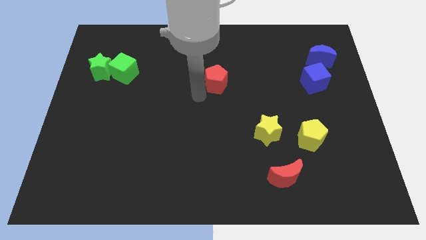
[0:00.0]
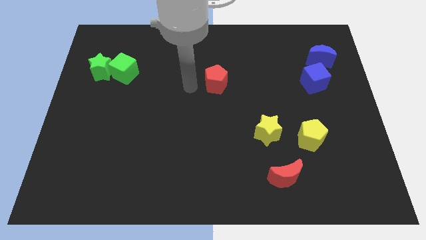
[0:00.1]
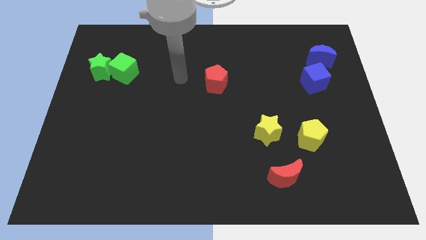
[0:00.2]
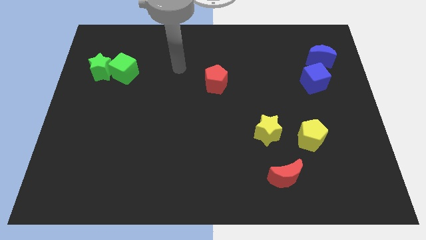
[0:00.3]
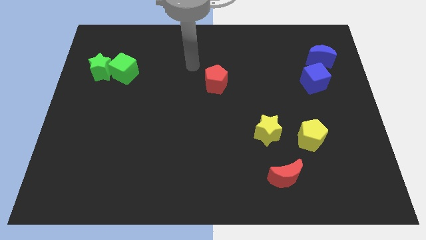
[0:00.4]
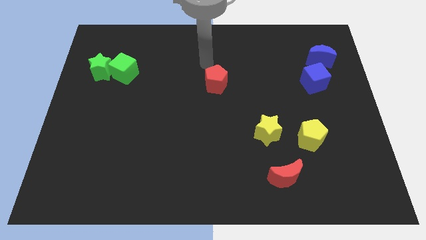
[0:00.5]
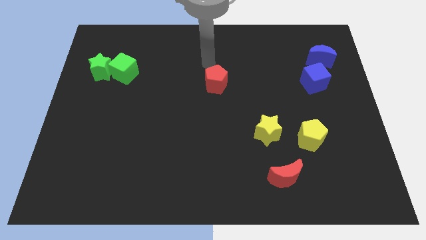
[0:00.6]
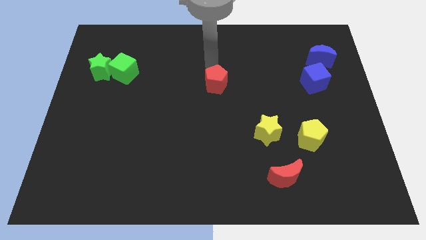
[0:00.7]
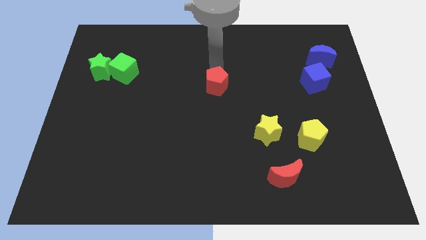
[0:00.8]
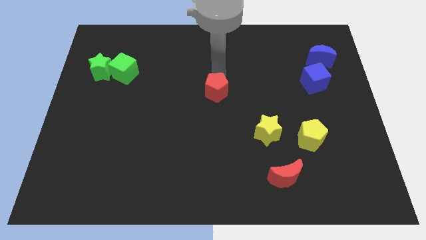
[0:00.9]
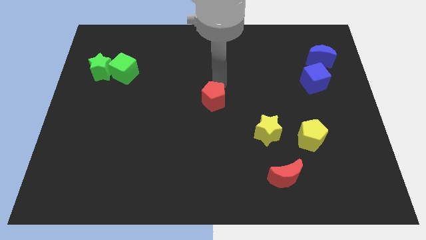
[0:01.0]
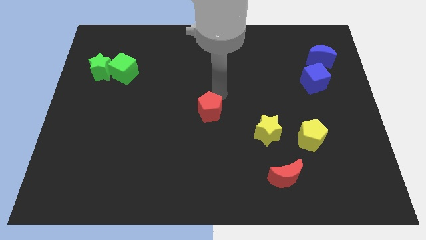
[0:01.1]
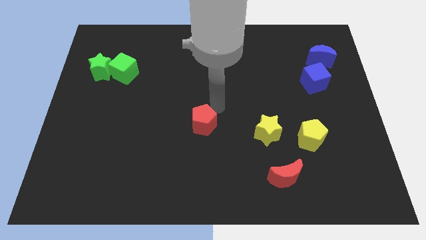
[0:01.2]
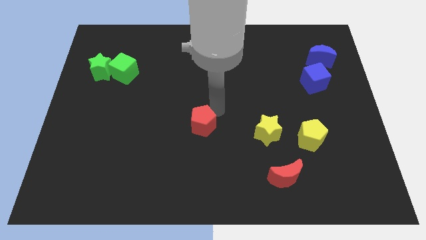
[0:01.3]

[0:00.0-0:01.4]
place the red pentgaon left to the yellow star

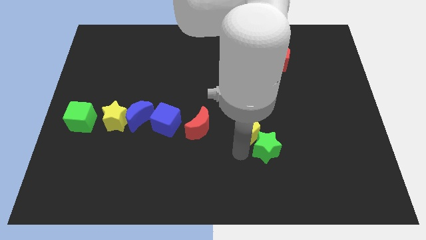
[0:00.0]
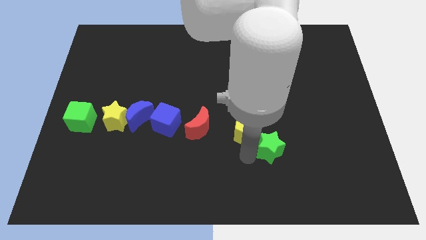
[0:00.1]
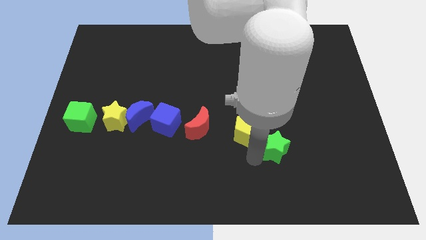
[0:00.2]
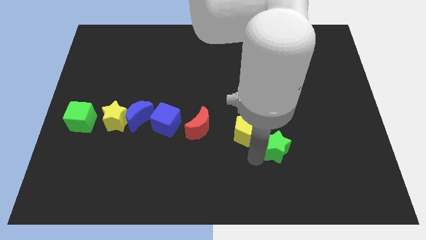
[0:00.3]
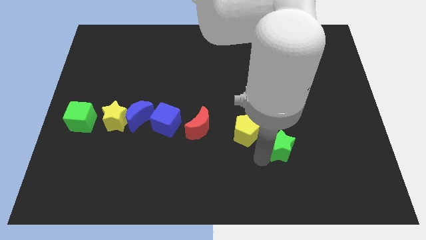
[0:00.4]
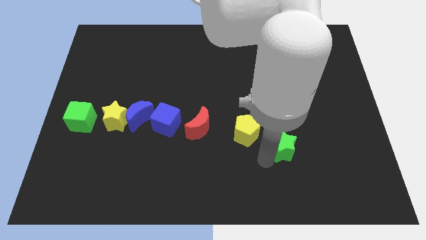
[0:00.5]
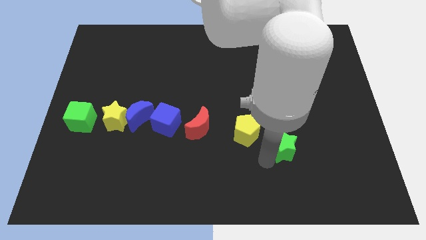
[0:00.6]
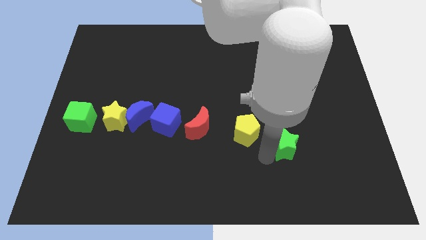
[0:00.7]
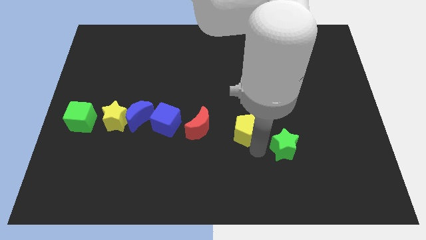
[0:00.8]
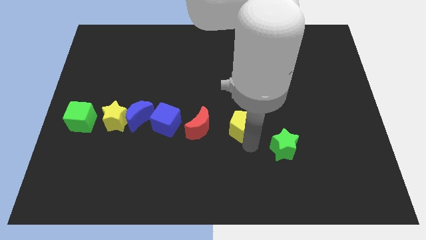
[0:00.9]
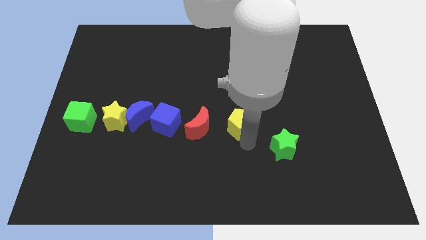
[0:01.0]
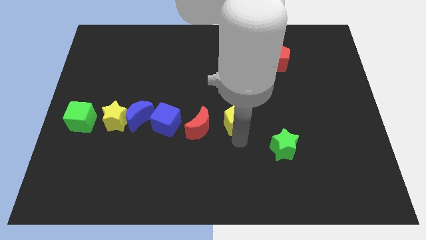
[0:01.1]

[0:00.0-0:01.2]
push yellow pentagon to the right side of the red crescent

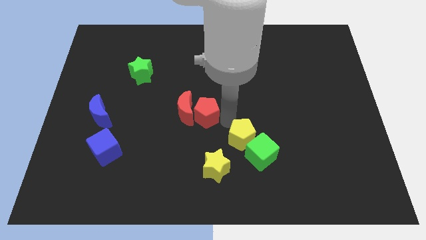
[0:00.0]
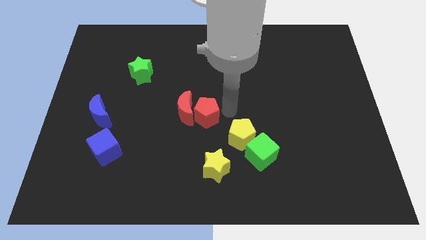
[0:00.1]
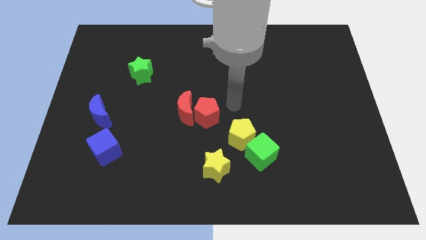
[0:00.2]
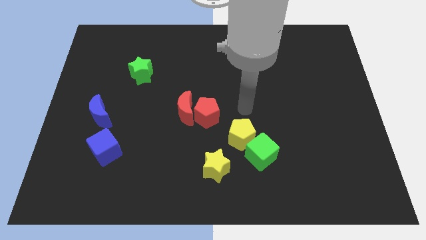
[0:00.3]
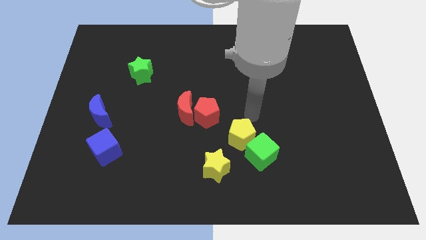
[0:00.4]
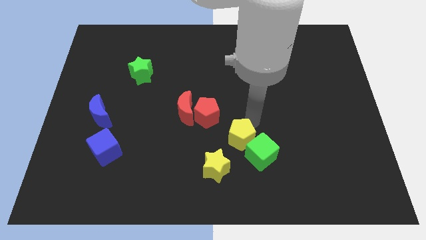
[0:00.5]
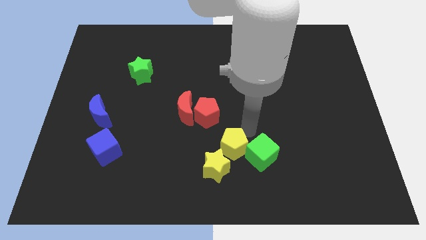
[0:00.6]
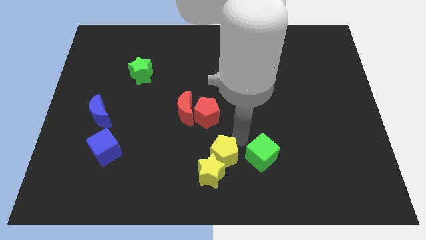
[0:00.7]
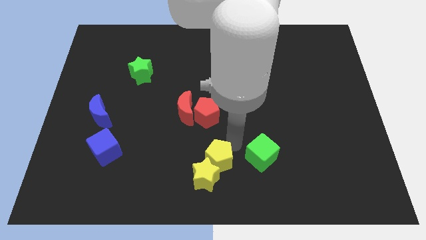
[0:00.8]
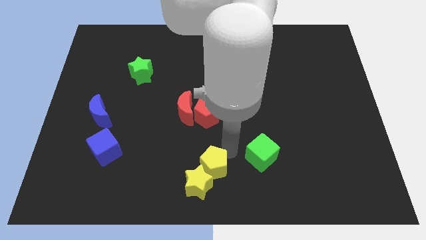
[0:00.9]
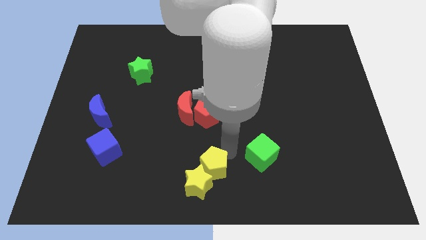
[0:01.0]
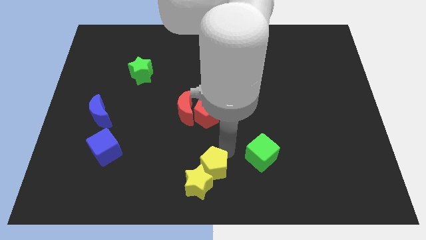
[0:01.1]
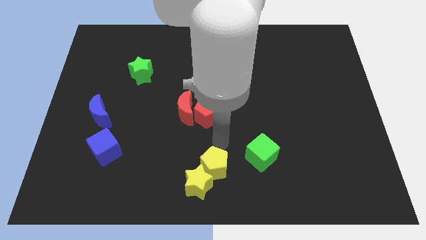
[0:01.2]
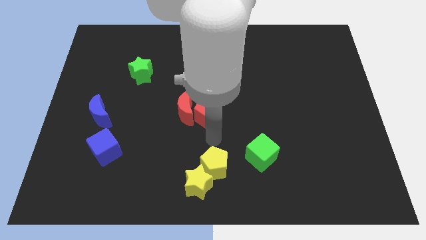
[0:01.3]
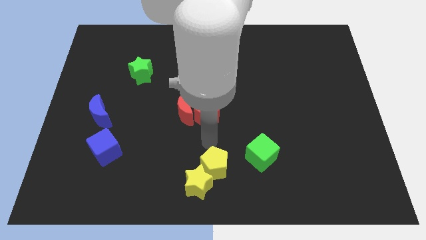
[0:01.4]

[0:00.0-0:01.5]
place both the yellow blocks at the bottom center of the board

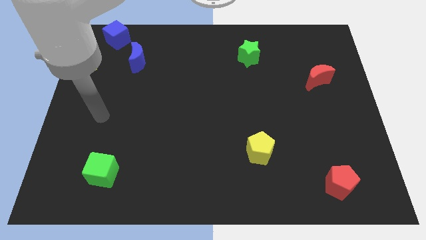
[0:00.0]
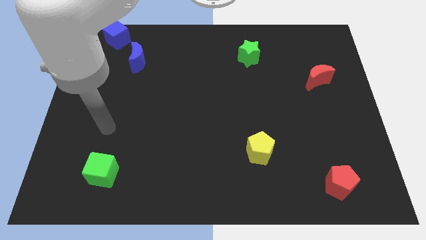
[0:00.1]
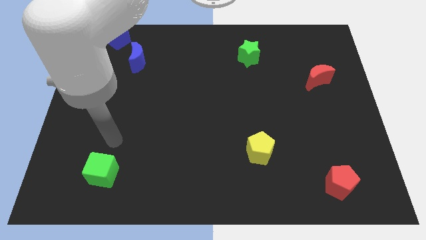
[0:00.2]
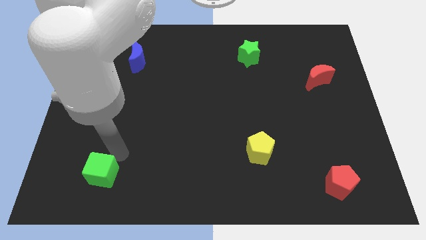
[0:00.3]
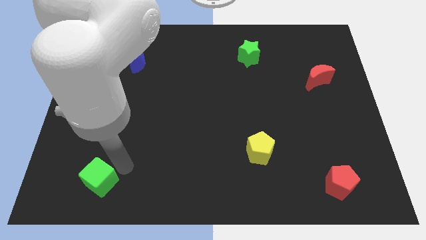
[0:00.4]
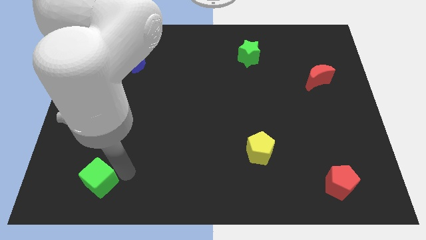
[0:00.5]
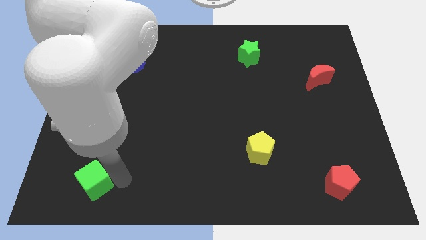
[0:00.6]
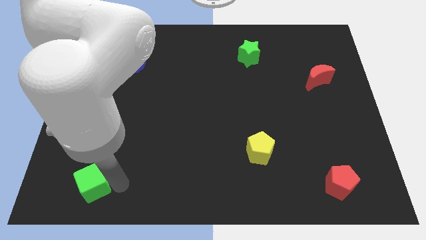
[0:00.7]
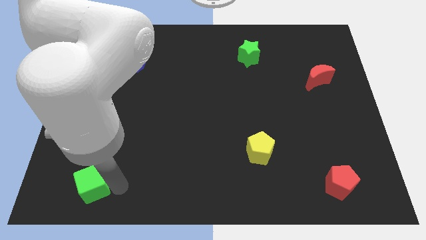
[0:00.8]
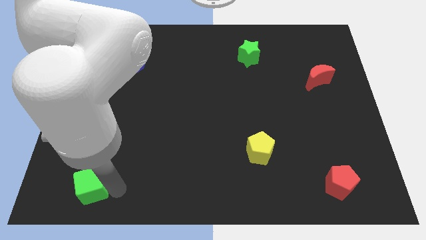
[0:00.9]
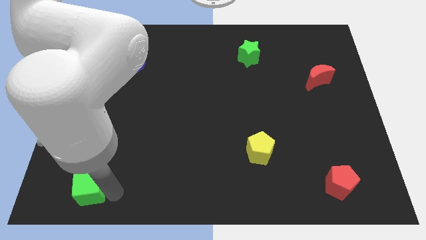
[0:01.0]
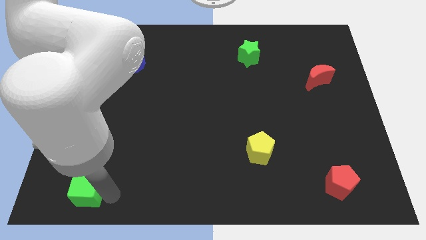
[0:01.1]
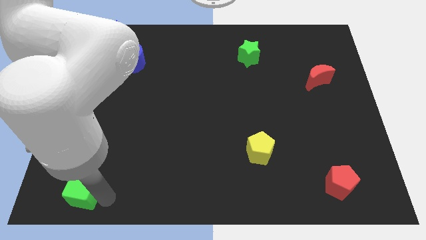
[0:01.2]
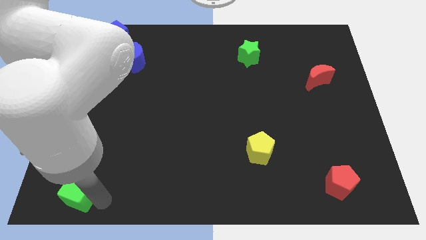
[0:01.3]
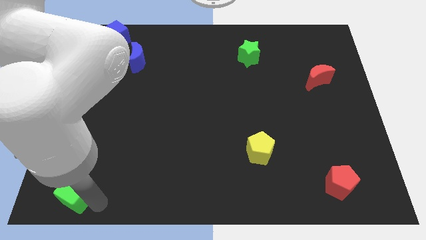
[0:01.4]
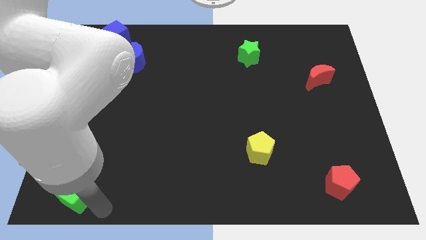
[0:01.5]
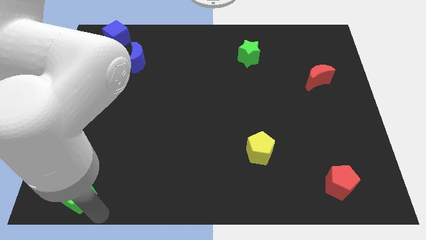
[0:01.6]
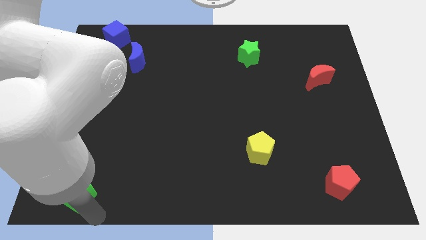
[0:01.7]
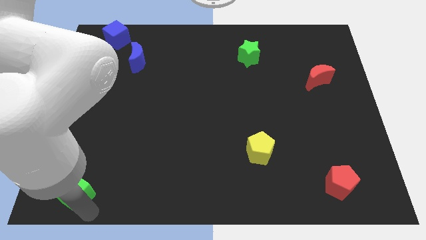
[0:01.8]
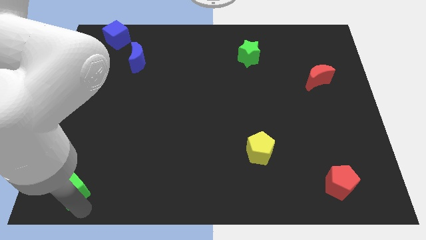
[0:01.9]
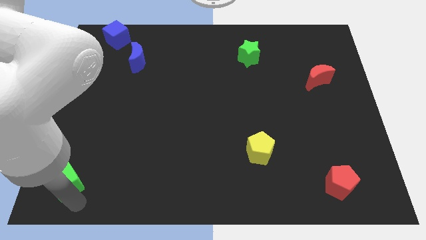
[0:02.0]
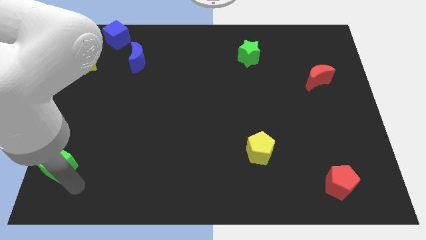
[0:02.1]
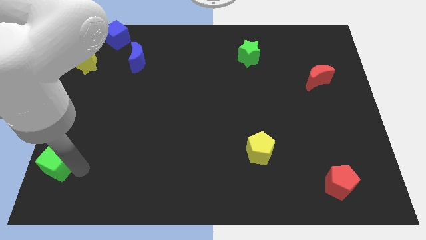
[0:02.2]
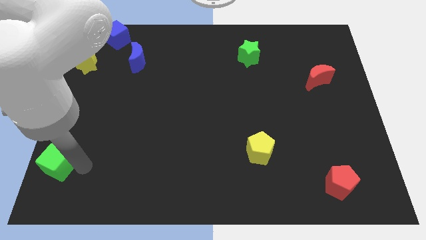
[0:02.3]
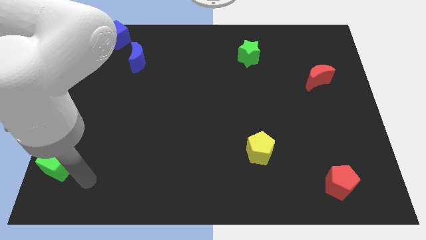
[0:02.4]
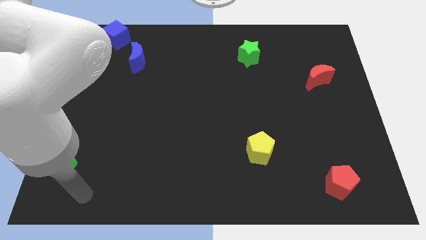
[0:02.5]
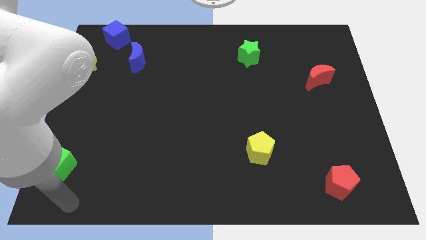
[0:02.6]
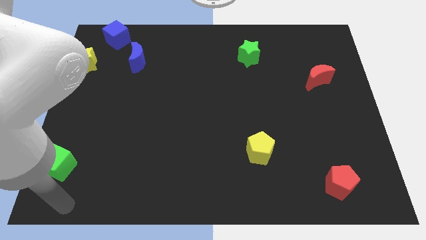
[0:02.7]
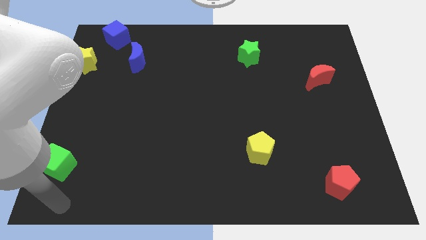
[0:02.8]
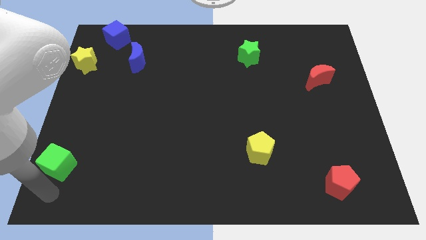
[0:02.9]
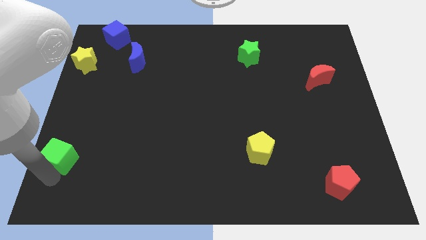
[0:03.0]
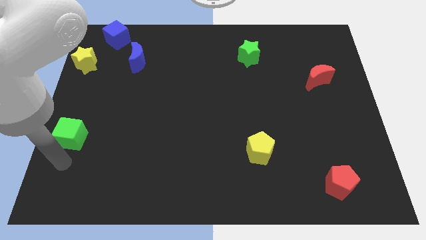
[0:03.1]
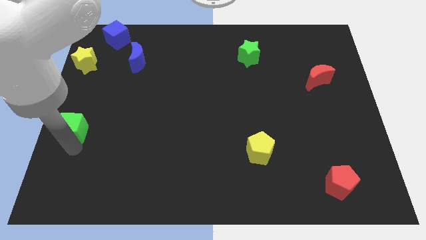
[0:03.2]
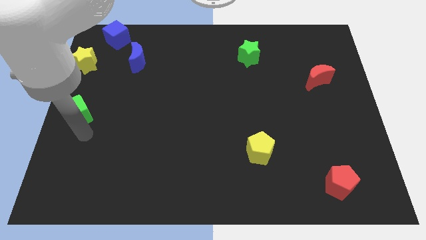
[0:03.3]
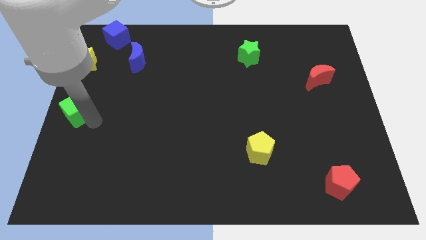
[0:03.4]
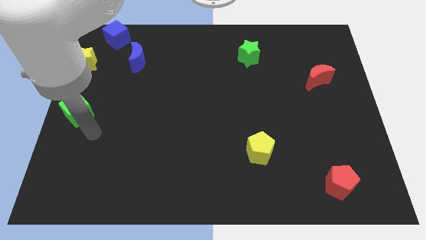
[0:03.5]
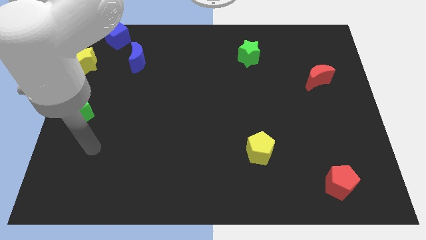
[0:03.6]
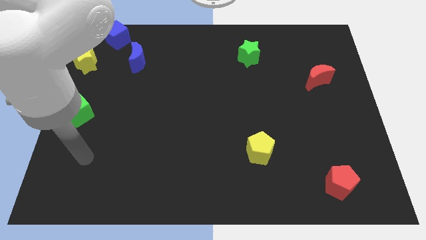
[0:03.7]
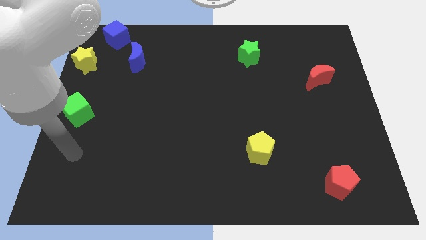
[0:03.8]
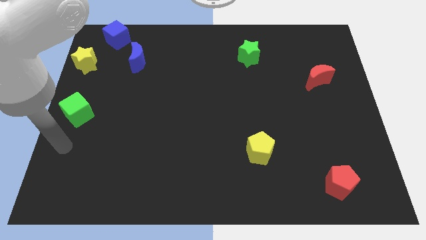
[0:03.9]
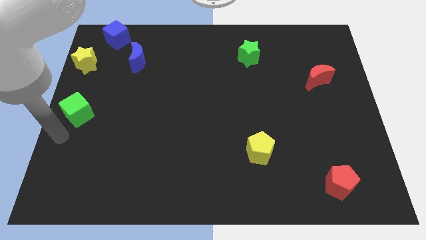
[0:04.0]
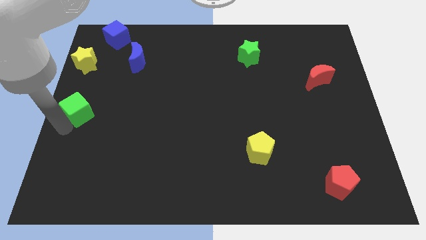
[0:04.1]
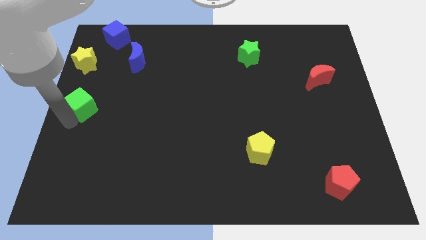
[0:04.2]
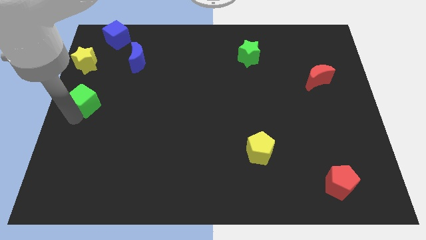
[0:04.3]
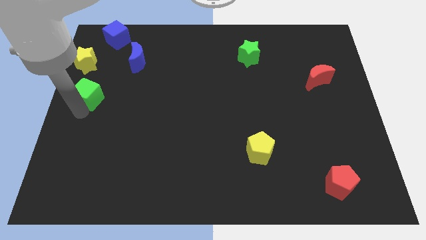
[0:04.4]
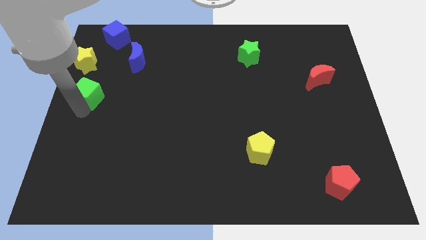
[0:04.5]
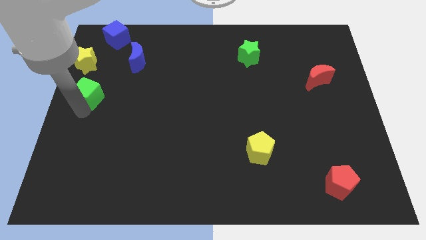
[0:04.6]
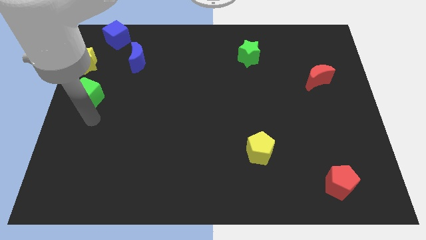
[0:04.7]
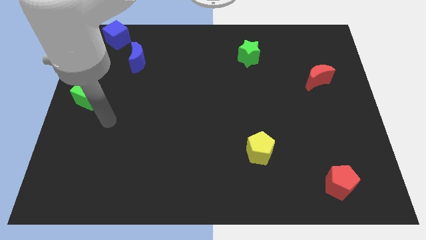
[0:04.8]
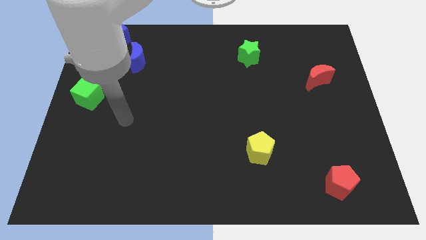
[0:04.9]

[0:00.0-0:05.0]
move the green cube below the yellow star
